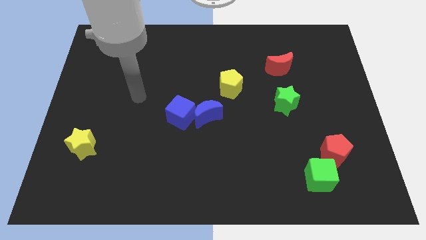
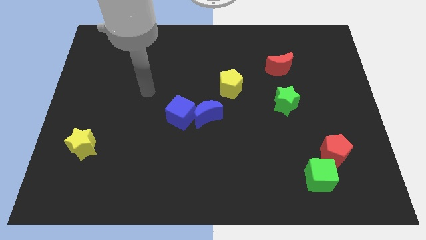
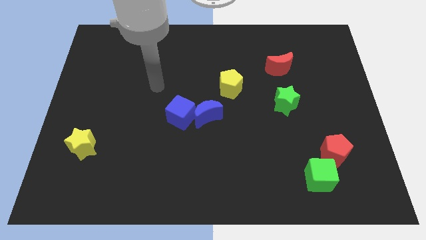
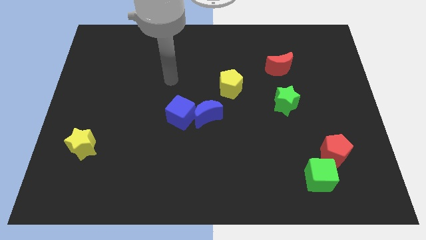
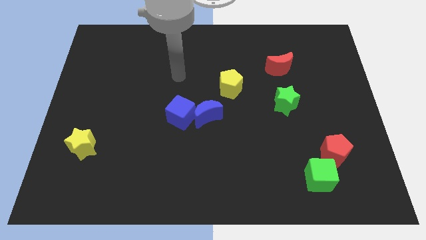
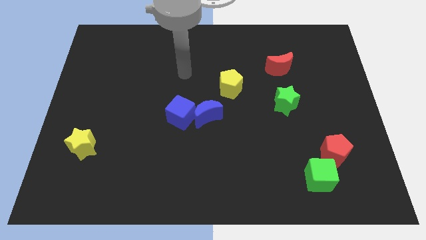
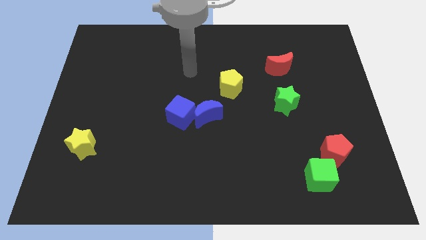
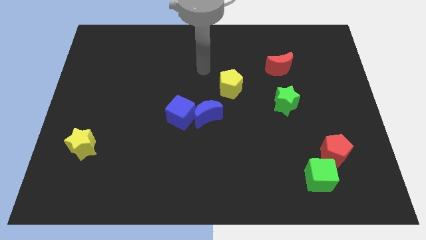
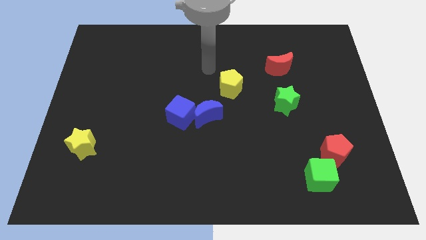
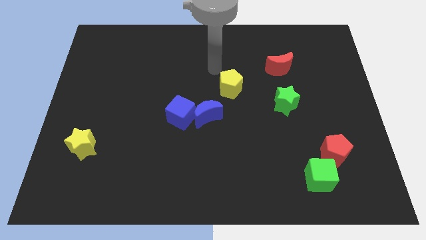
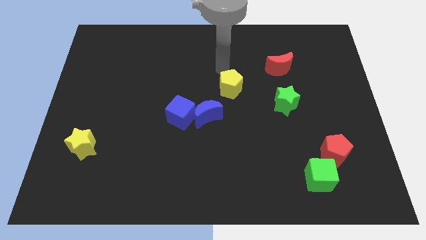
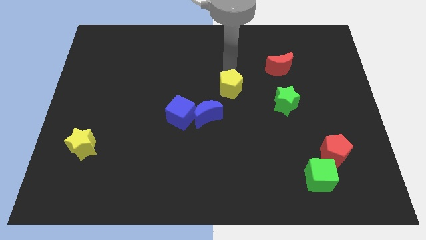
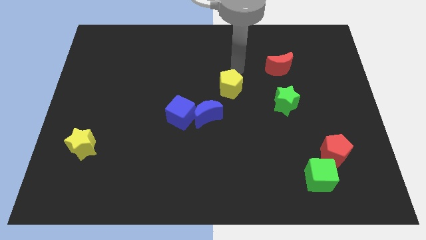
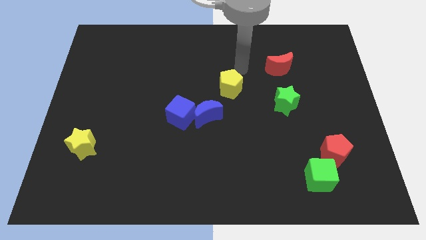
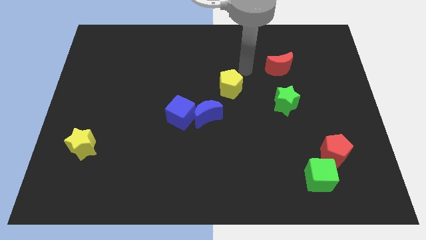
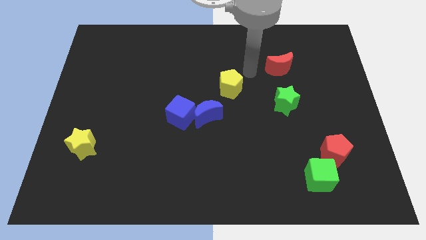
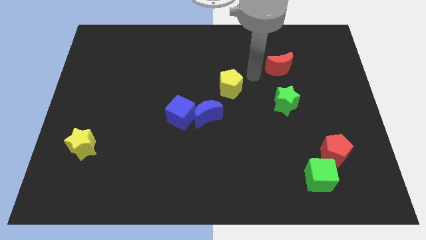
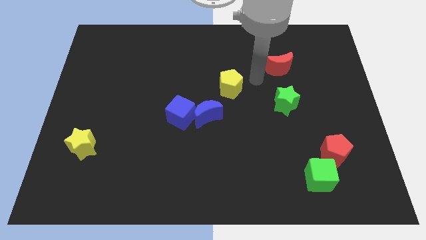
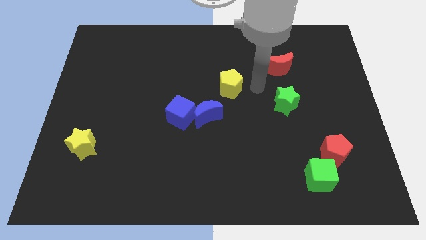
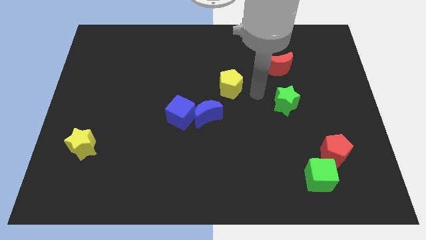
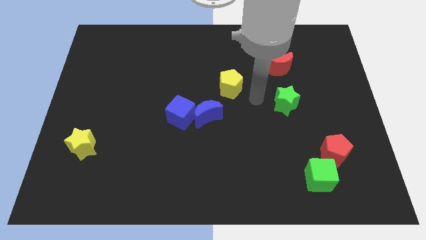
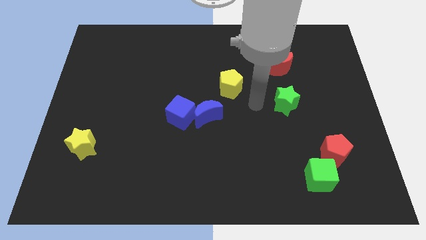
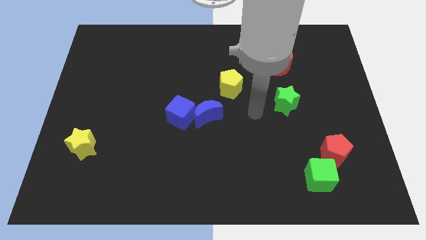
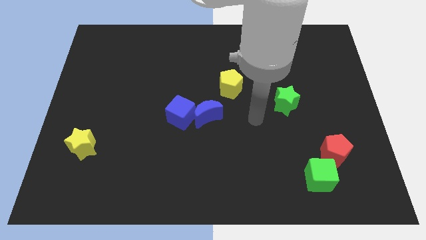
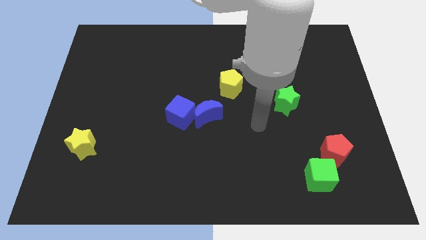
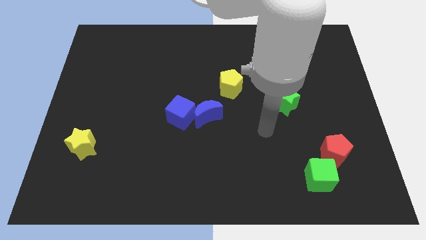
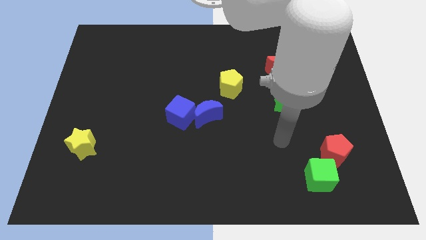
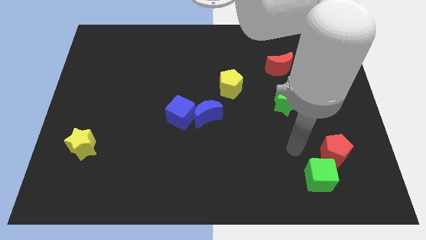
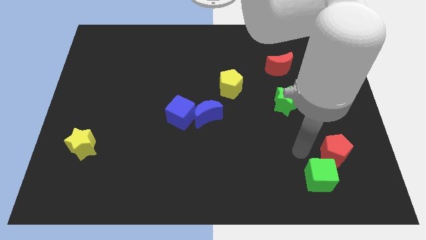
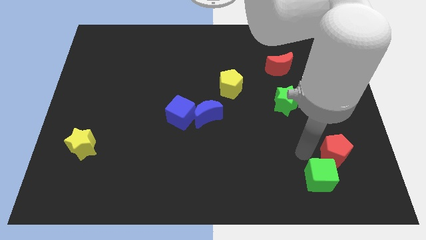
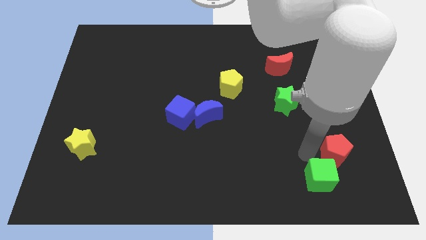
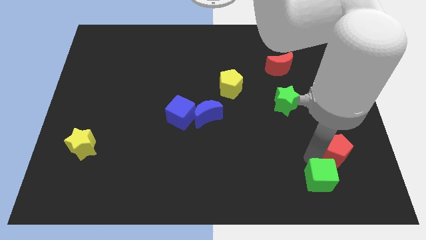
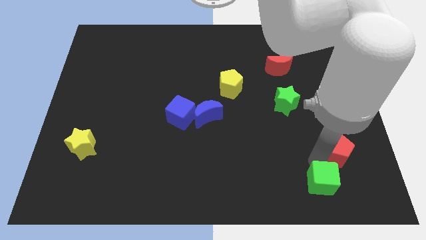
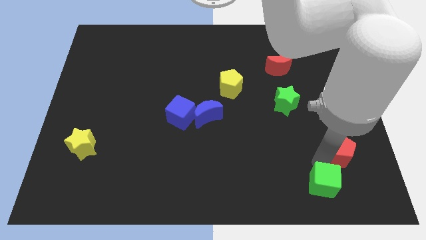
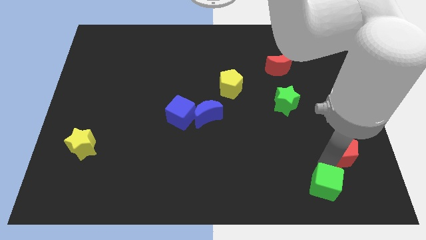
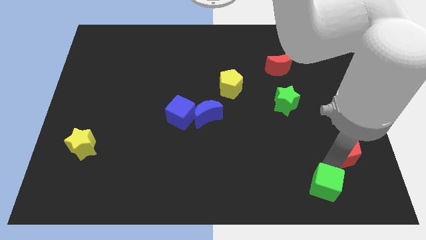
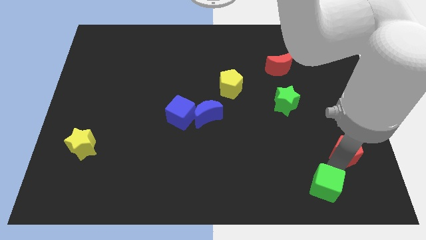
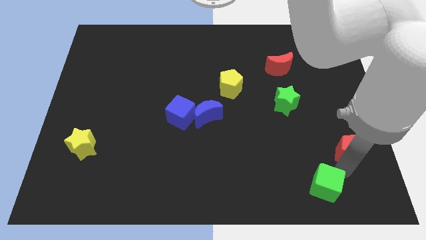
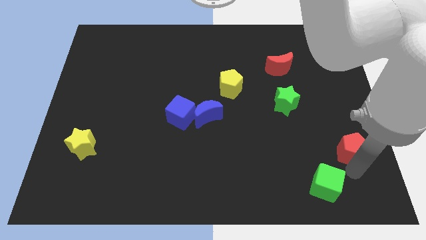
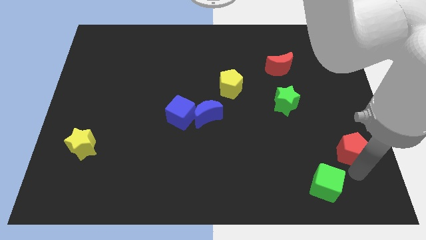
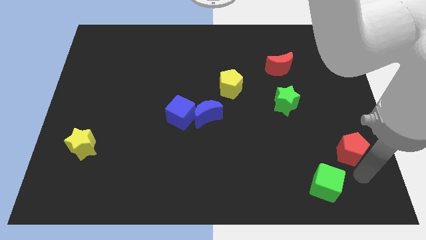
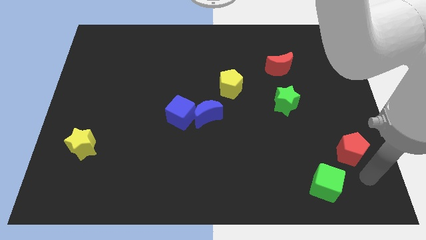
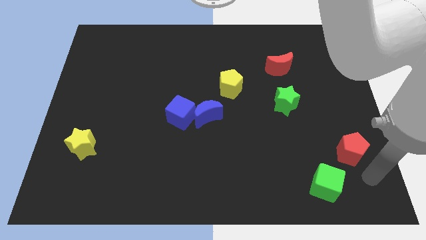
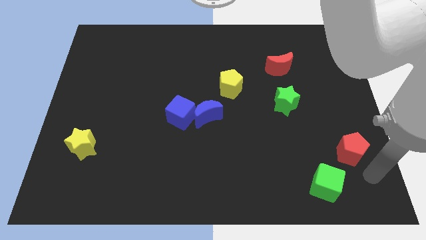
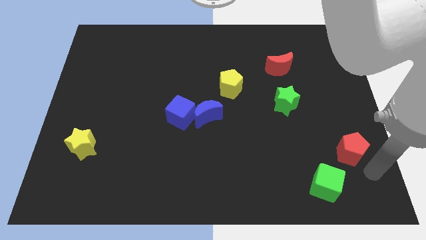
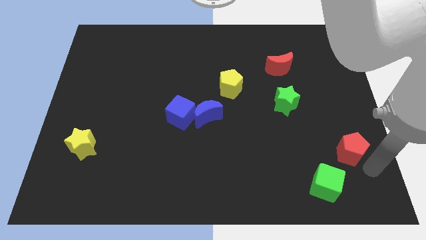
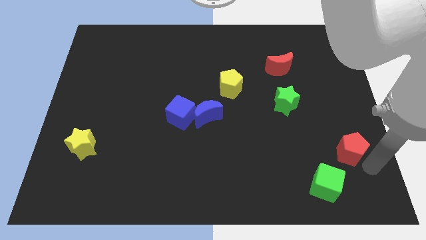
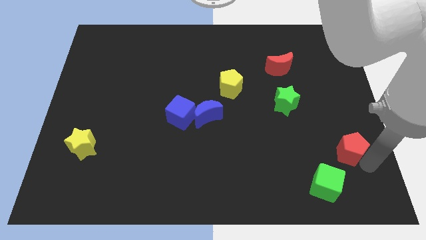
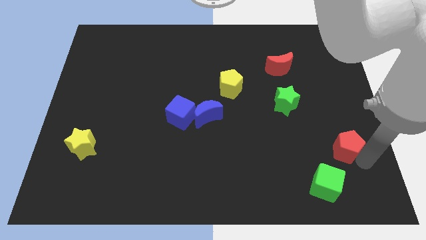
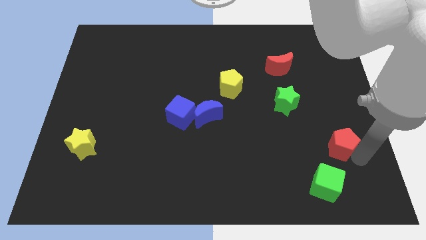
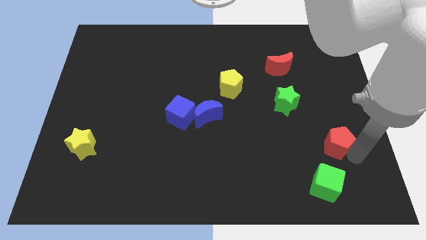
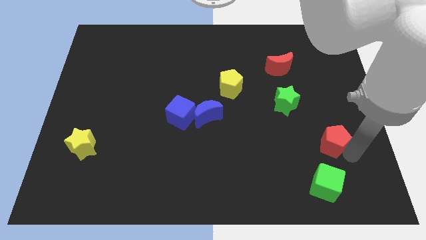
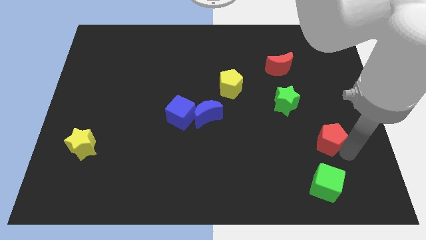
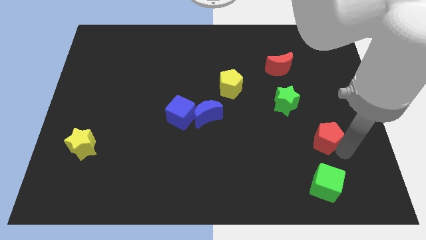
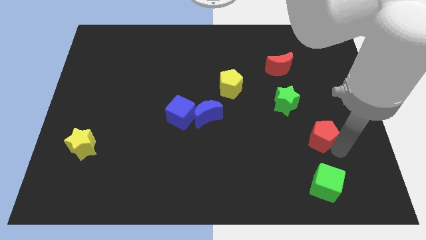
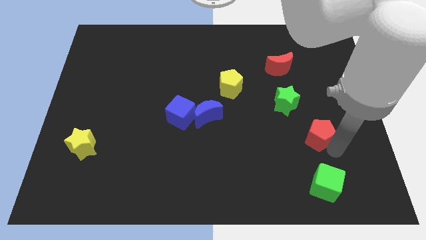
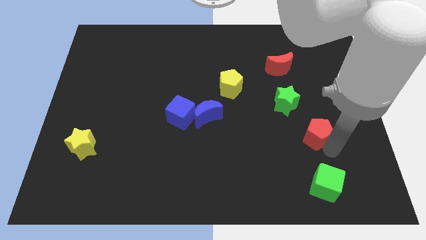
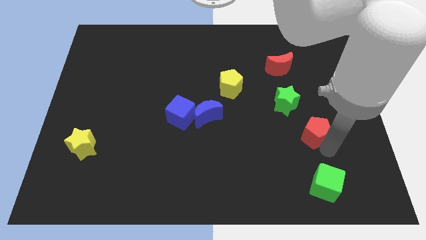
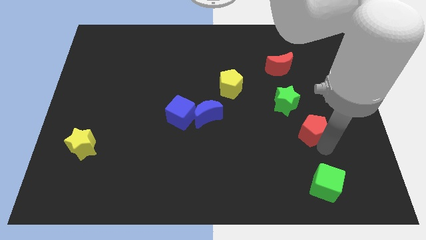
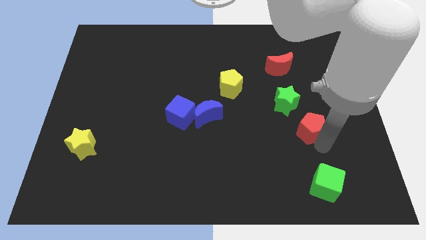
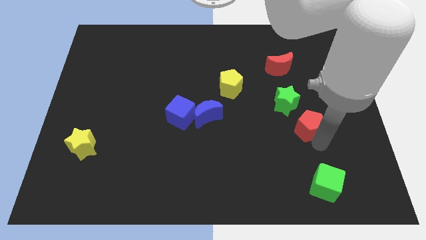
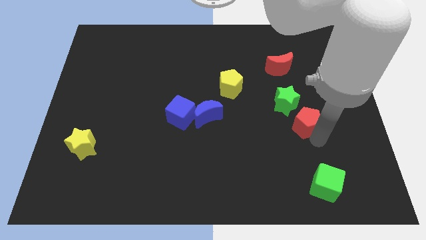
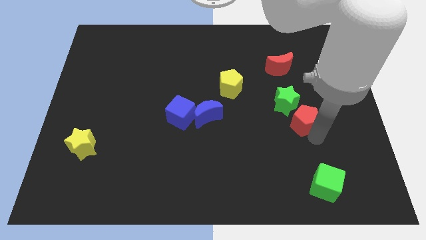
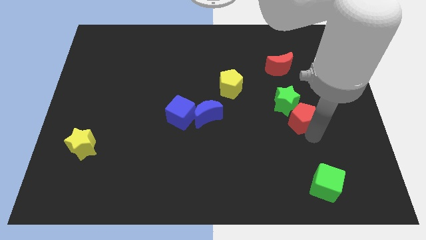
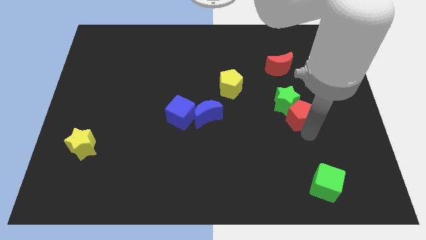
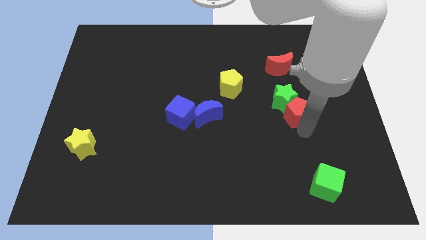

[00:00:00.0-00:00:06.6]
move the red pentagon close to the green star

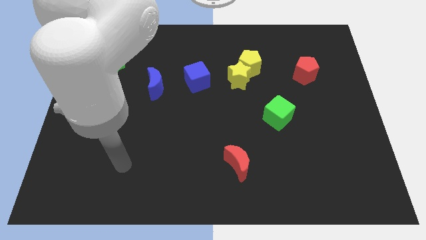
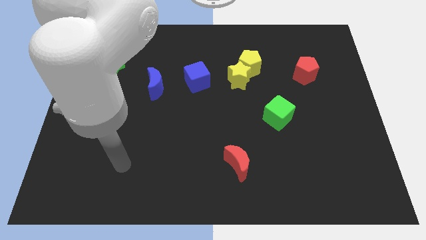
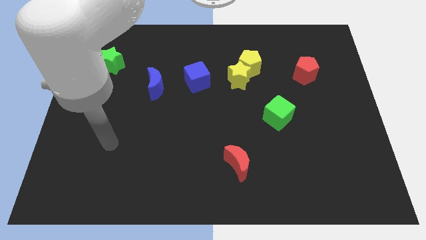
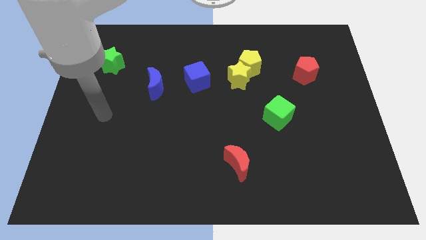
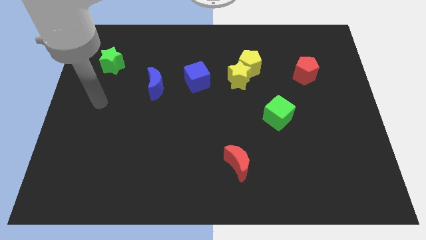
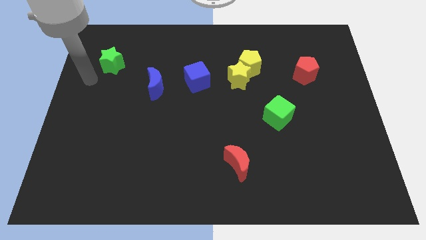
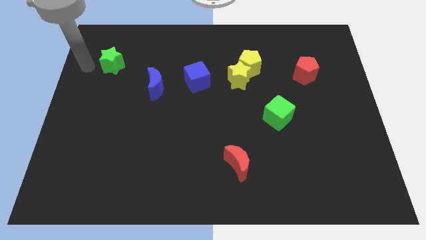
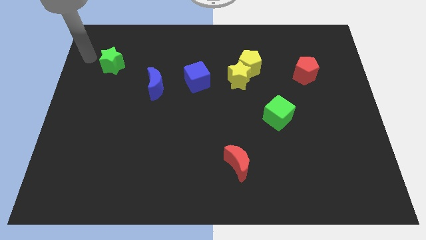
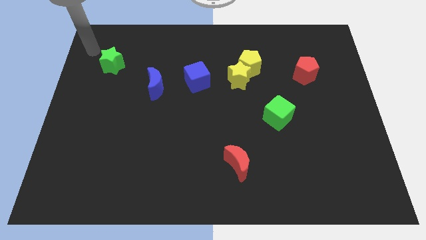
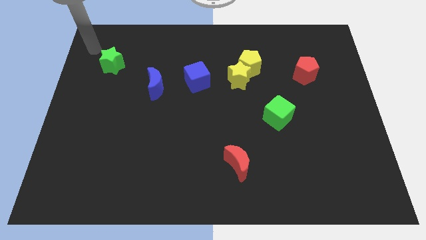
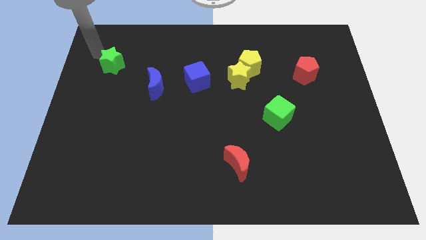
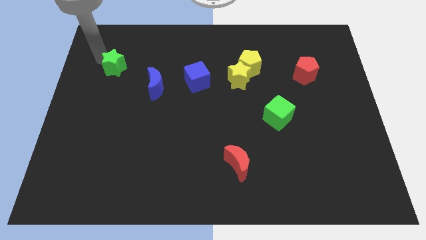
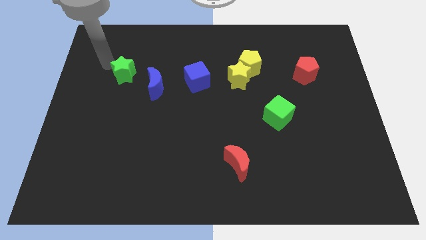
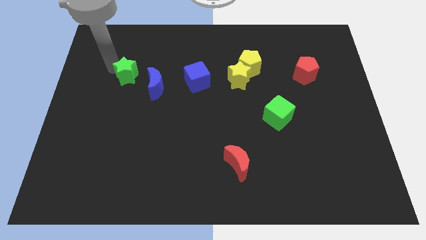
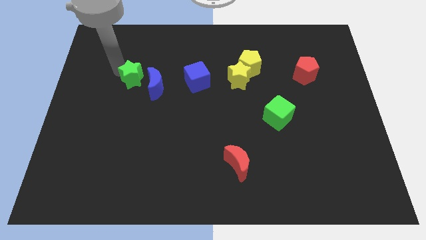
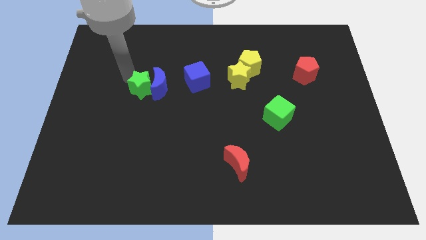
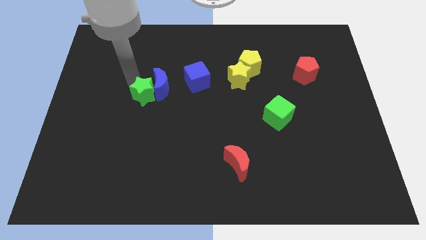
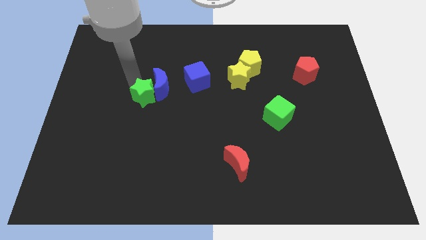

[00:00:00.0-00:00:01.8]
put the green star next to the blue moon
